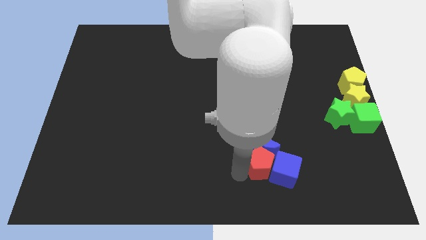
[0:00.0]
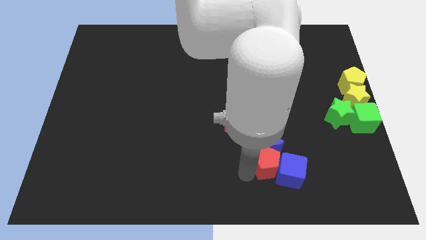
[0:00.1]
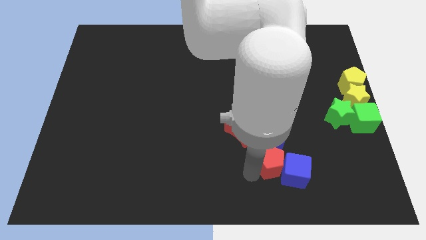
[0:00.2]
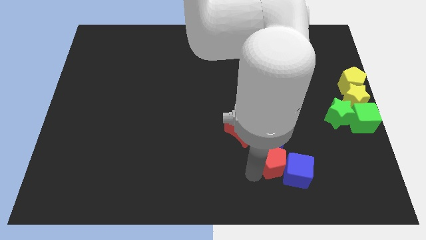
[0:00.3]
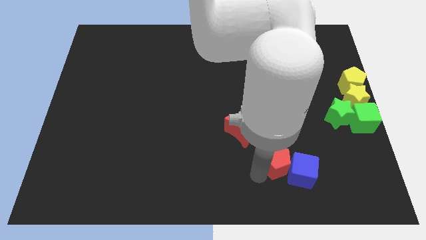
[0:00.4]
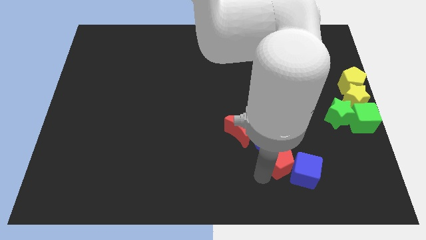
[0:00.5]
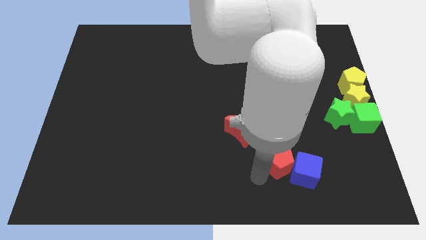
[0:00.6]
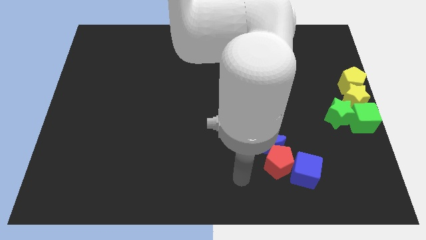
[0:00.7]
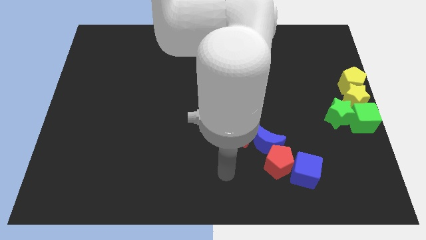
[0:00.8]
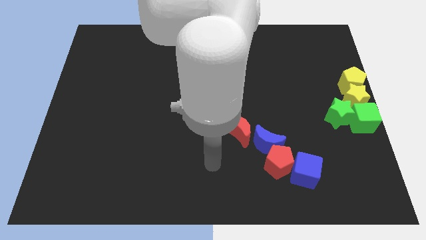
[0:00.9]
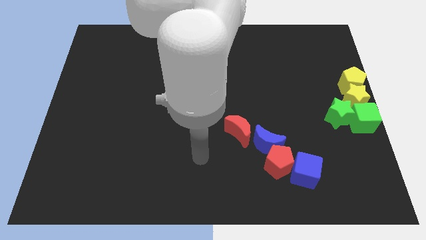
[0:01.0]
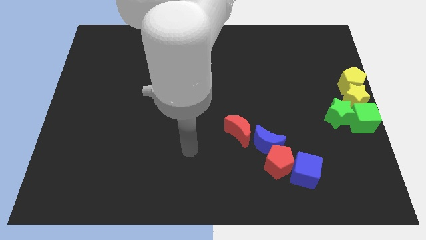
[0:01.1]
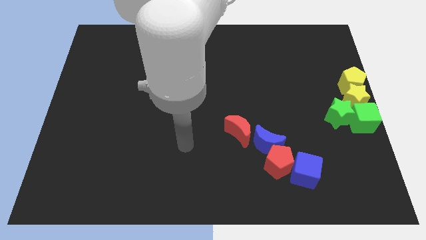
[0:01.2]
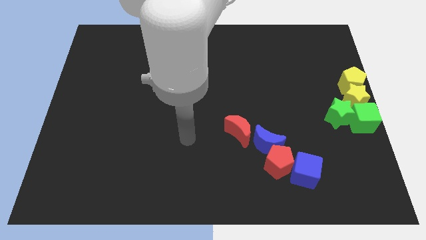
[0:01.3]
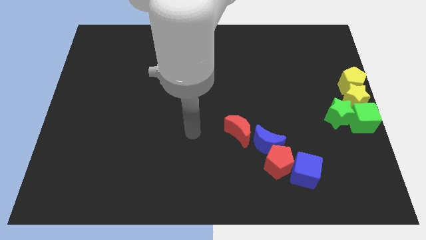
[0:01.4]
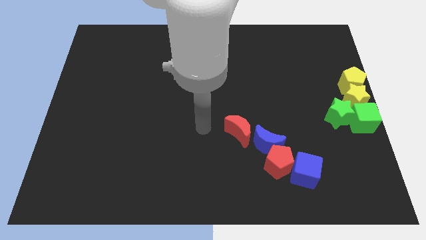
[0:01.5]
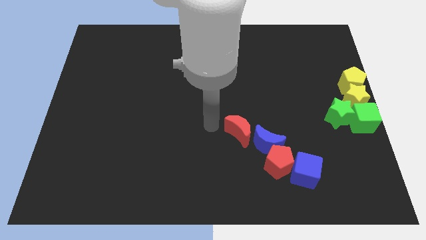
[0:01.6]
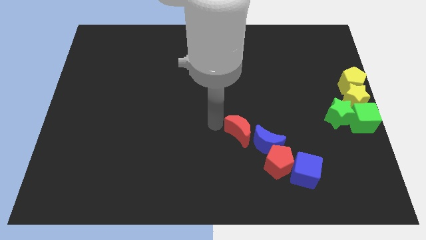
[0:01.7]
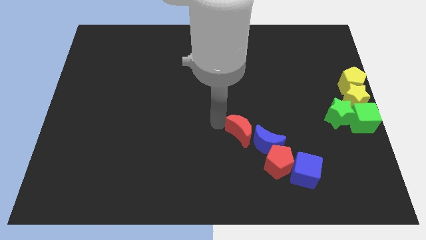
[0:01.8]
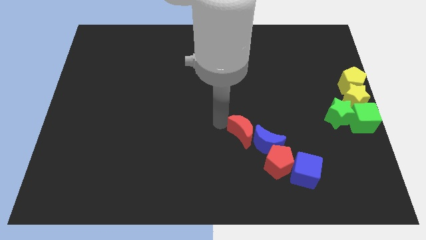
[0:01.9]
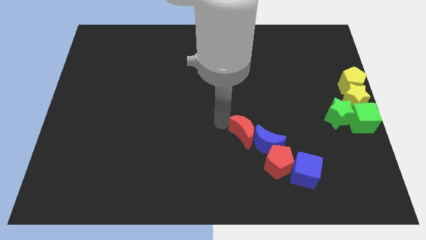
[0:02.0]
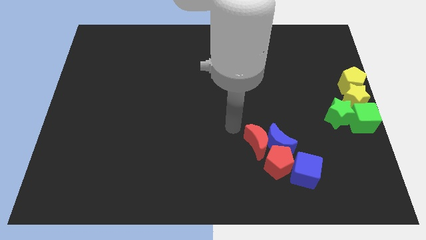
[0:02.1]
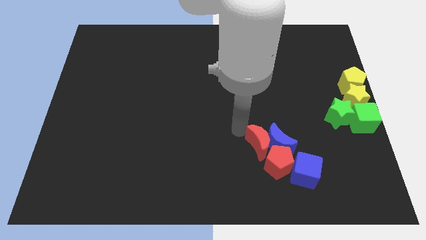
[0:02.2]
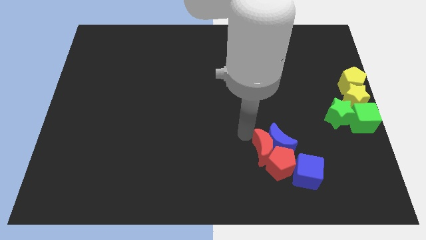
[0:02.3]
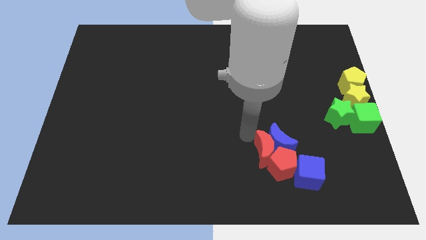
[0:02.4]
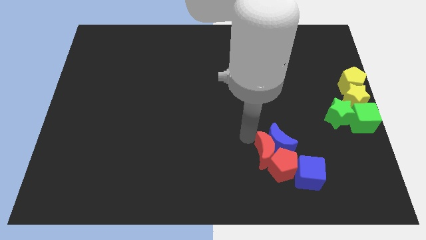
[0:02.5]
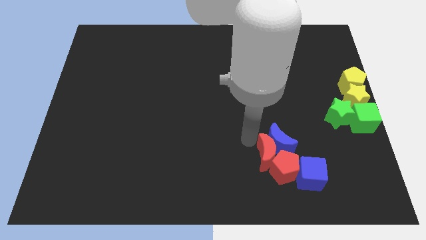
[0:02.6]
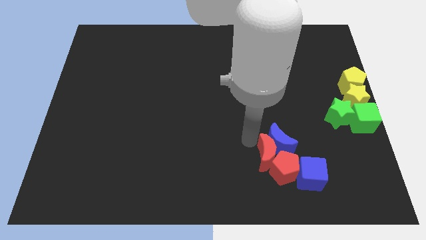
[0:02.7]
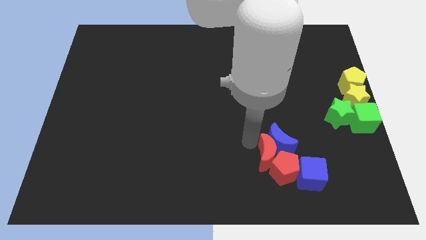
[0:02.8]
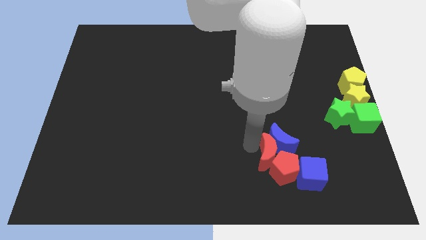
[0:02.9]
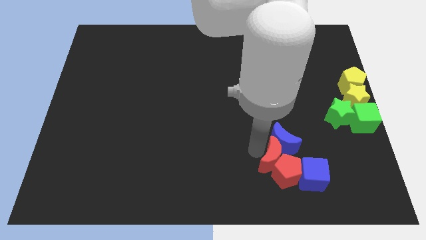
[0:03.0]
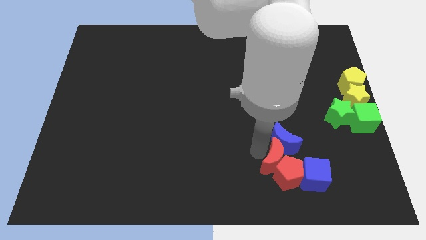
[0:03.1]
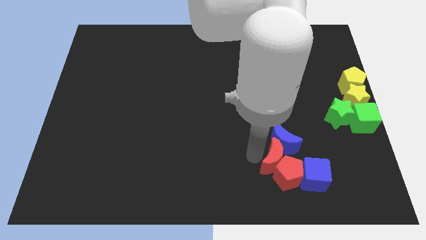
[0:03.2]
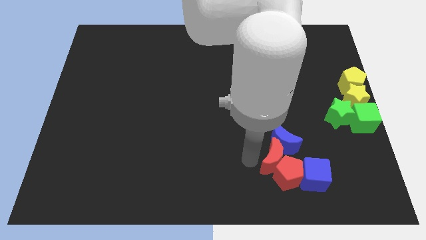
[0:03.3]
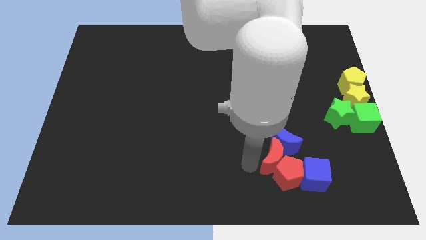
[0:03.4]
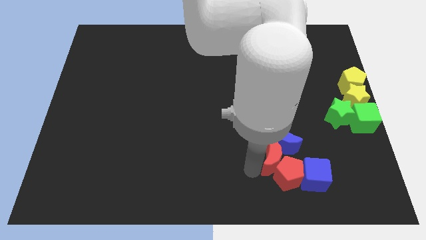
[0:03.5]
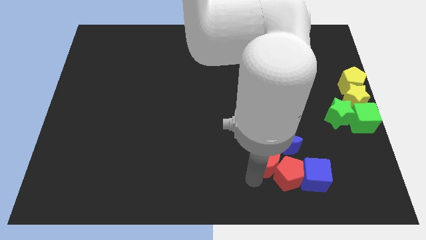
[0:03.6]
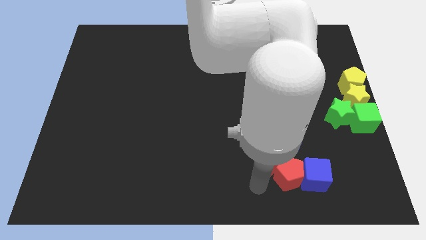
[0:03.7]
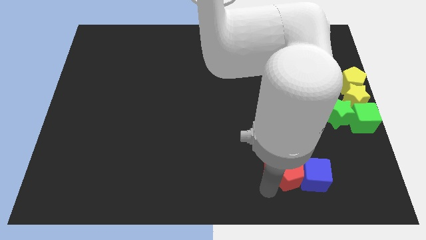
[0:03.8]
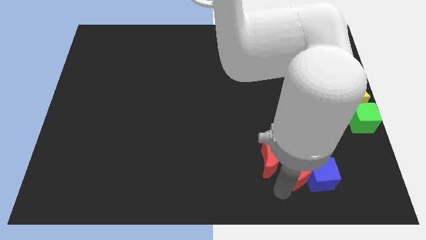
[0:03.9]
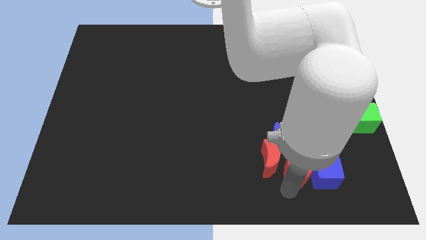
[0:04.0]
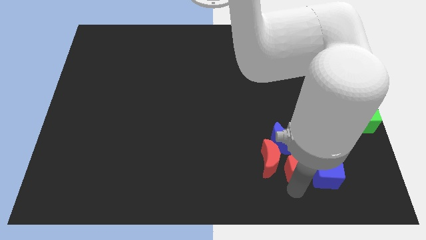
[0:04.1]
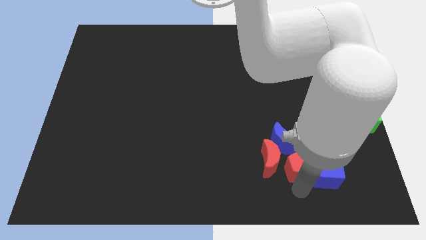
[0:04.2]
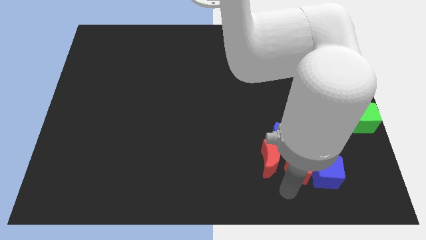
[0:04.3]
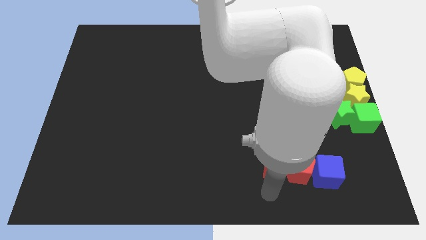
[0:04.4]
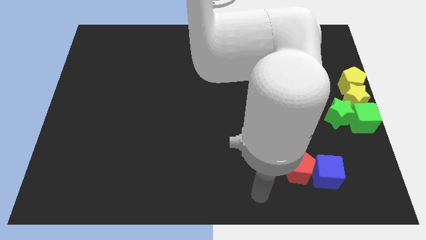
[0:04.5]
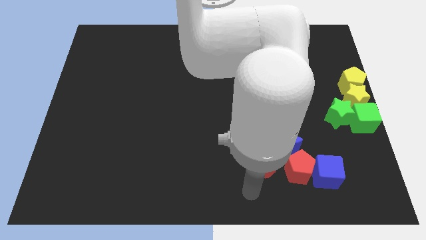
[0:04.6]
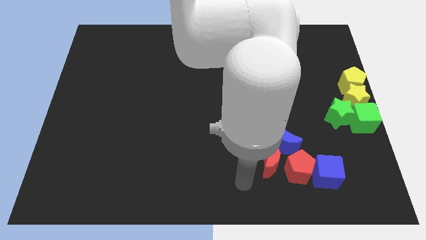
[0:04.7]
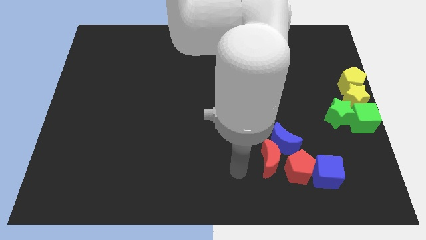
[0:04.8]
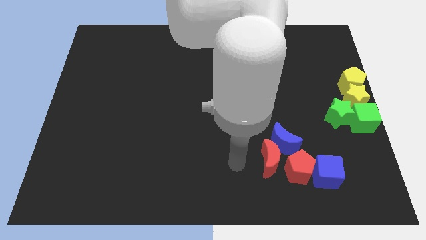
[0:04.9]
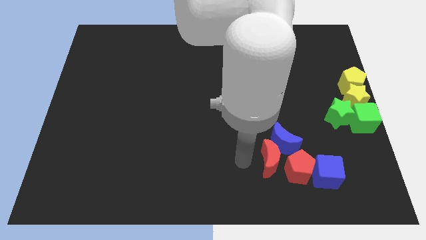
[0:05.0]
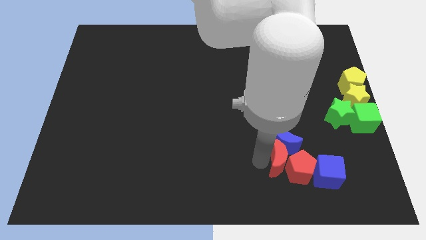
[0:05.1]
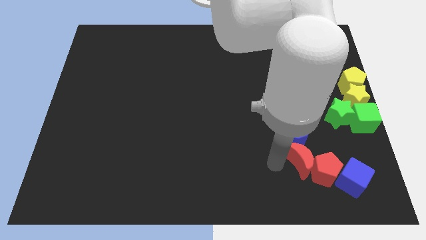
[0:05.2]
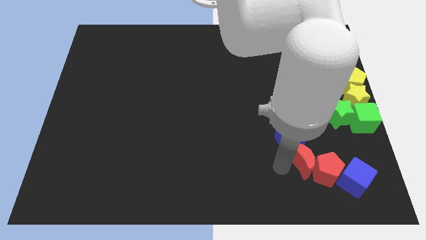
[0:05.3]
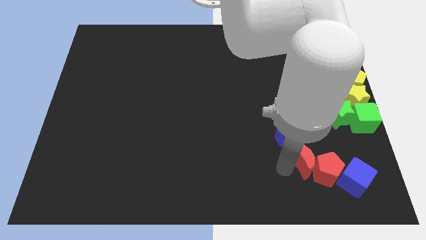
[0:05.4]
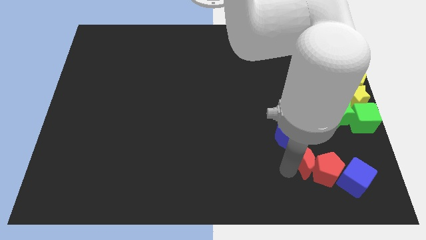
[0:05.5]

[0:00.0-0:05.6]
move the group of blocks towards the bottom right of the table

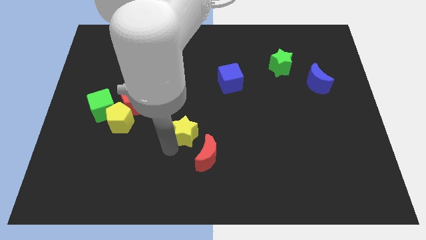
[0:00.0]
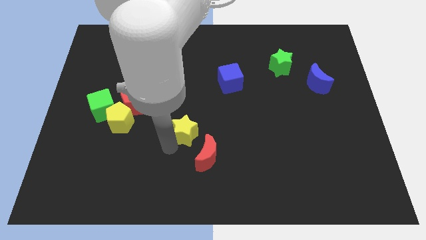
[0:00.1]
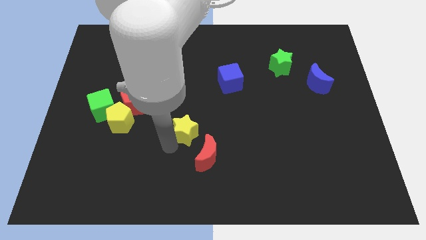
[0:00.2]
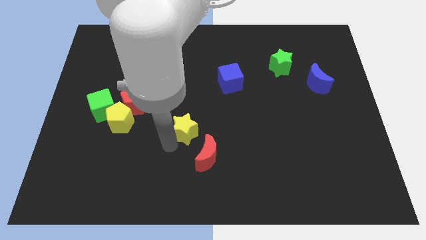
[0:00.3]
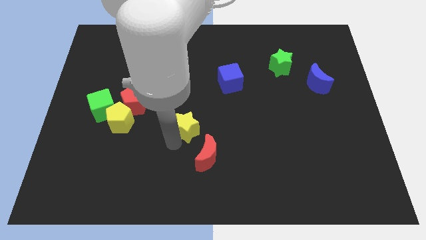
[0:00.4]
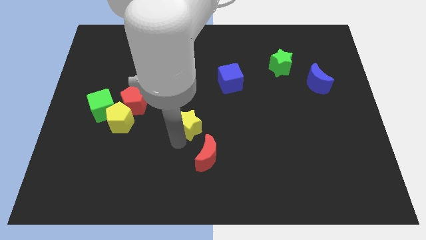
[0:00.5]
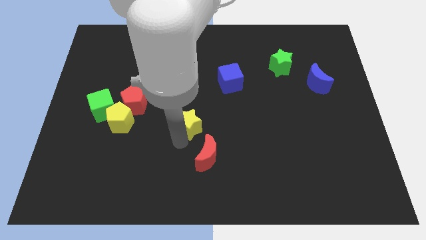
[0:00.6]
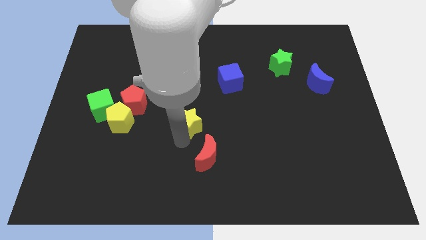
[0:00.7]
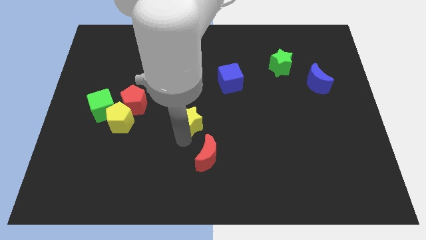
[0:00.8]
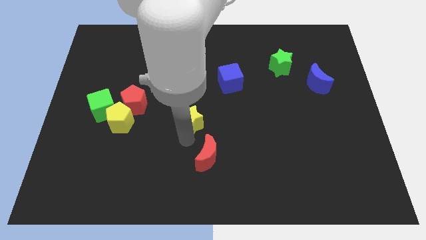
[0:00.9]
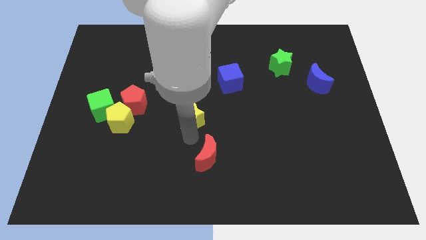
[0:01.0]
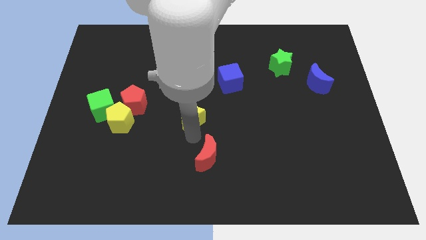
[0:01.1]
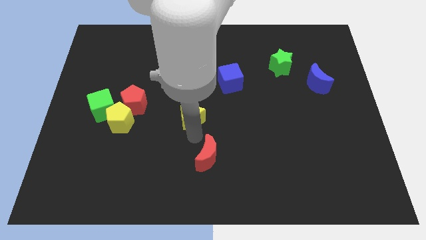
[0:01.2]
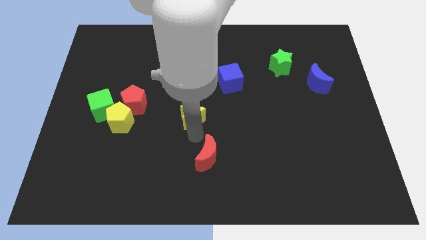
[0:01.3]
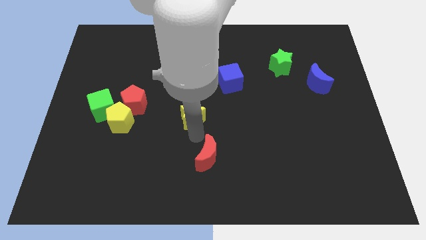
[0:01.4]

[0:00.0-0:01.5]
slightly move the yellow star parallel to the yellow pentagon

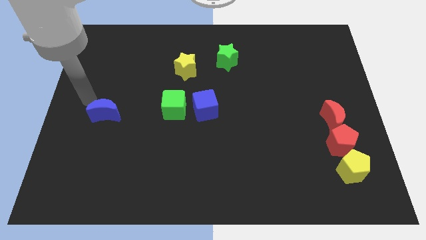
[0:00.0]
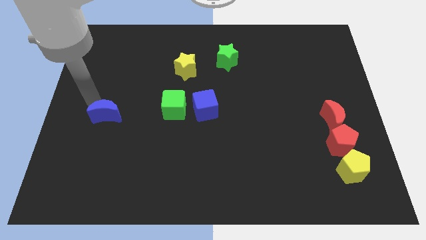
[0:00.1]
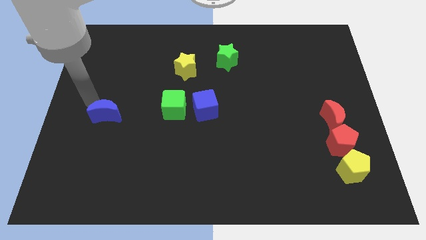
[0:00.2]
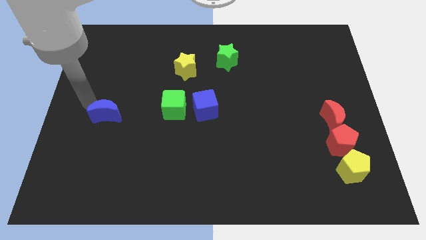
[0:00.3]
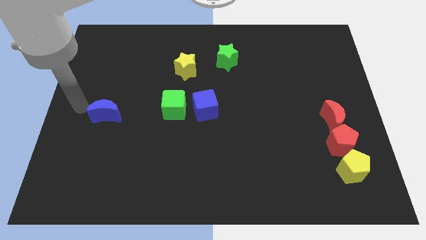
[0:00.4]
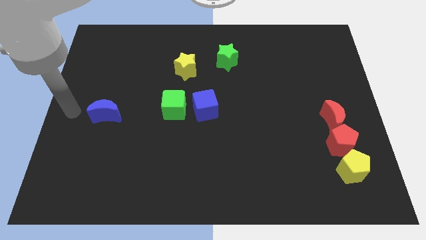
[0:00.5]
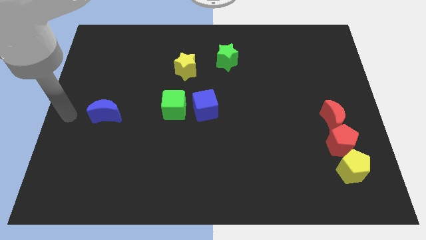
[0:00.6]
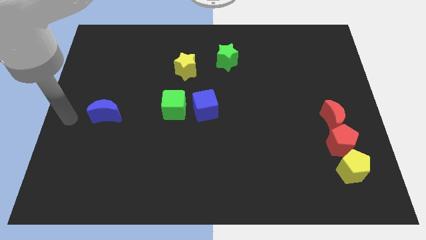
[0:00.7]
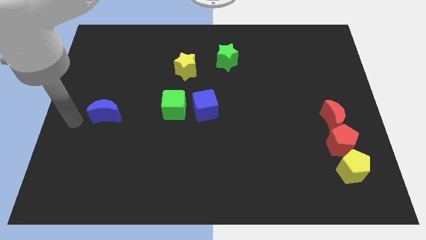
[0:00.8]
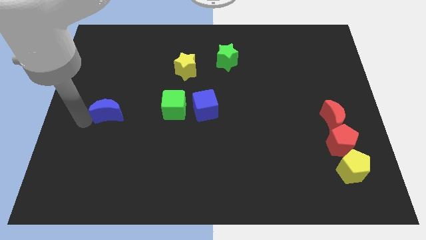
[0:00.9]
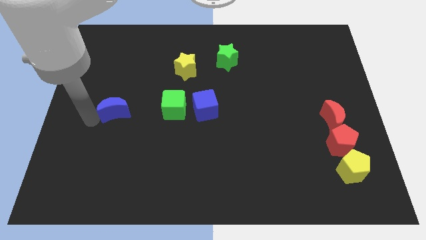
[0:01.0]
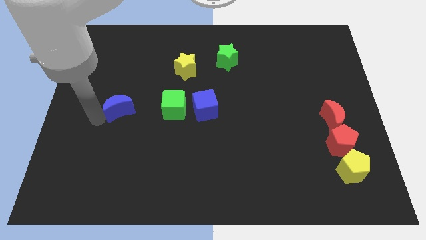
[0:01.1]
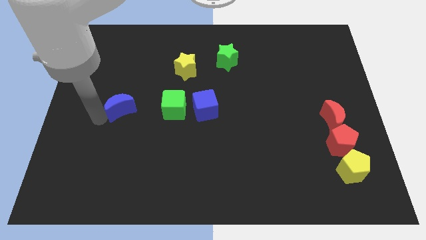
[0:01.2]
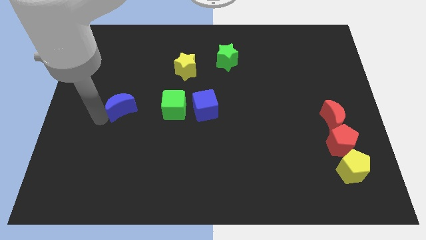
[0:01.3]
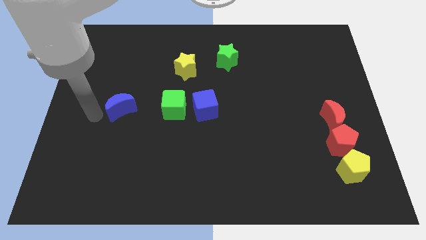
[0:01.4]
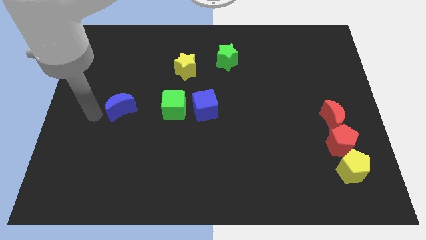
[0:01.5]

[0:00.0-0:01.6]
place the blue cube horizontally at the left side of the green cube

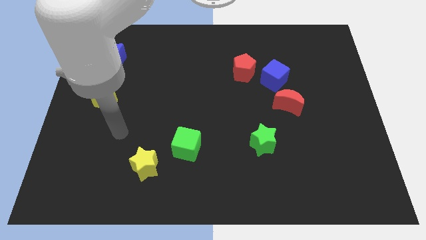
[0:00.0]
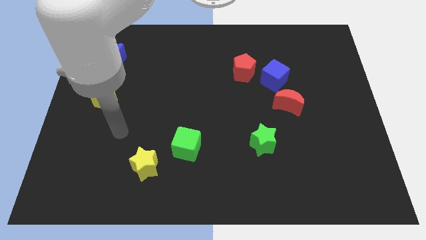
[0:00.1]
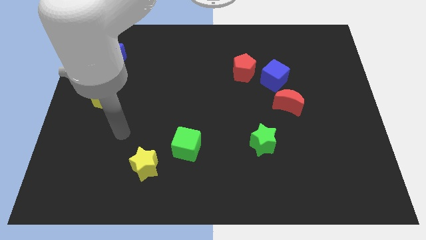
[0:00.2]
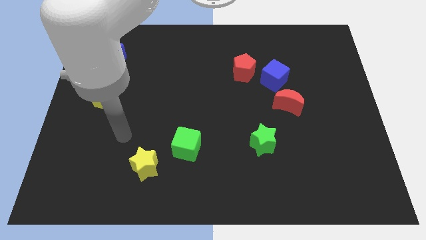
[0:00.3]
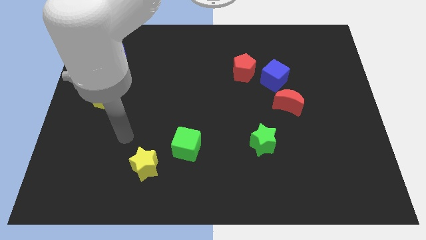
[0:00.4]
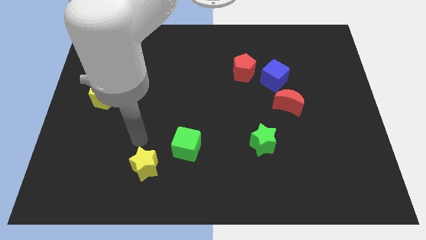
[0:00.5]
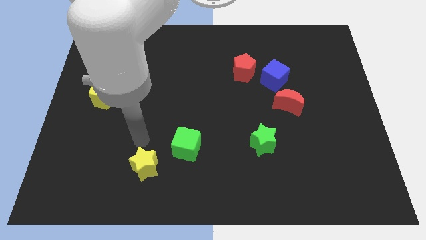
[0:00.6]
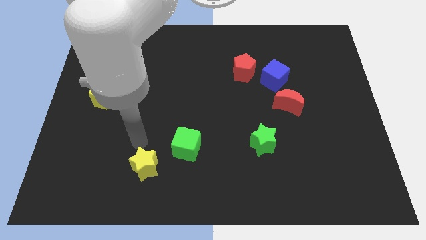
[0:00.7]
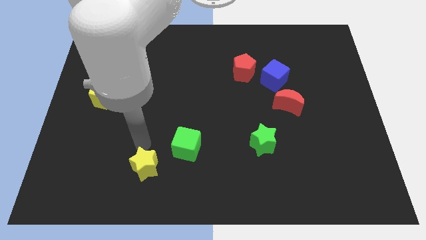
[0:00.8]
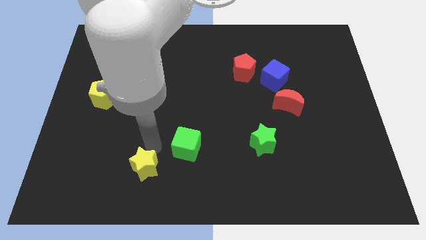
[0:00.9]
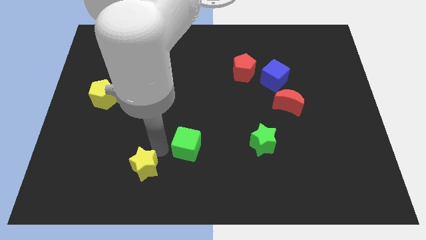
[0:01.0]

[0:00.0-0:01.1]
move your arm towards the green cube
